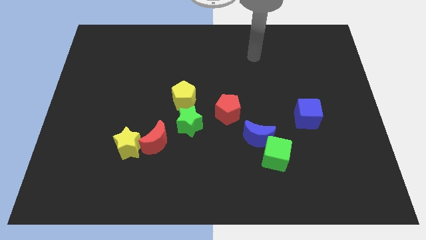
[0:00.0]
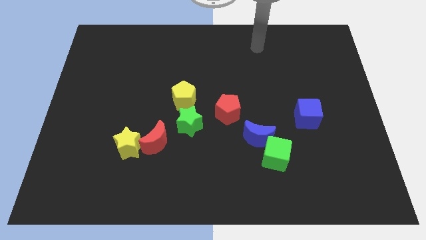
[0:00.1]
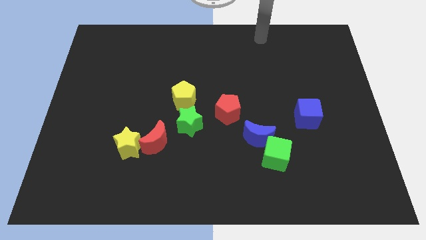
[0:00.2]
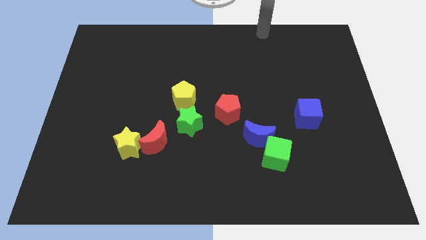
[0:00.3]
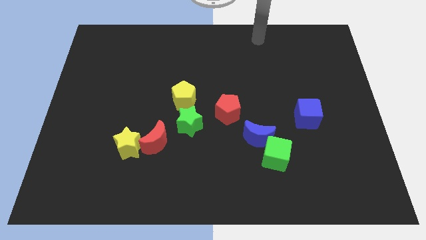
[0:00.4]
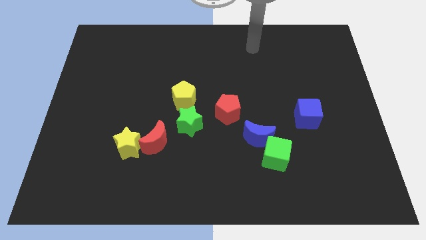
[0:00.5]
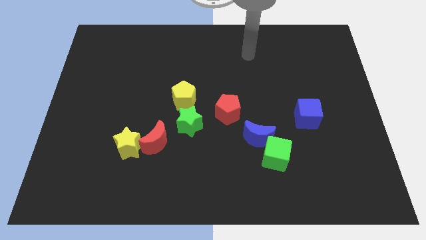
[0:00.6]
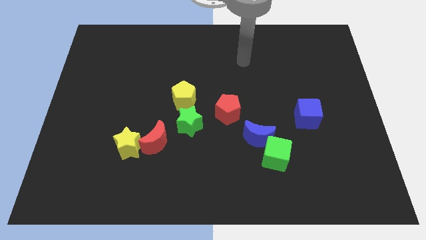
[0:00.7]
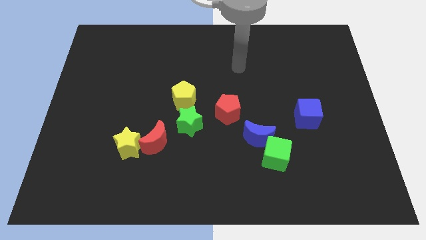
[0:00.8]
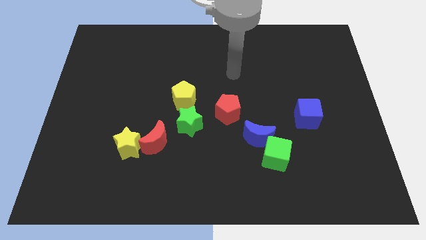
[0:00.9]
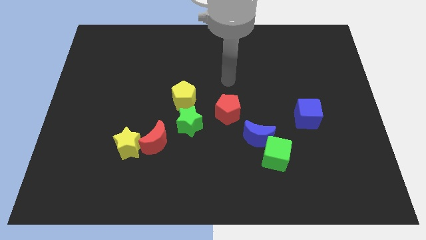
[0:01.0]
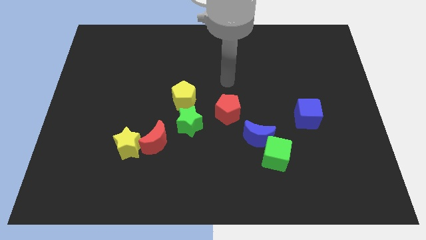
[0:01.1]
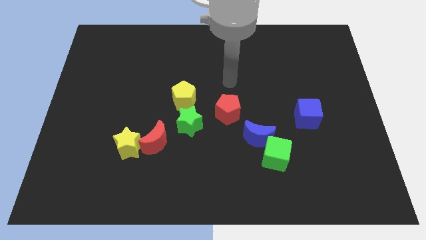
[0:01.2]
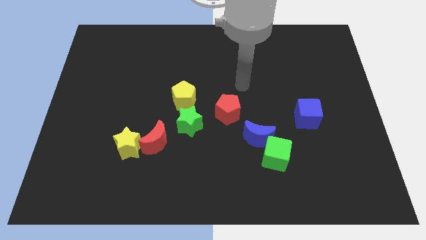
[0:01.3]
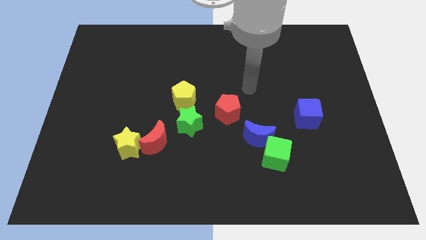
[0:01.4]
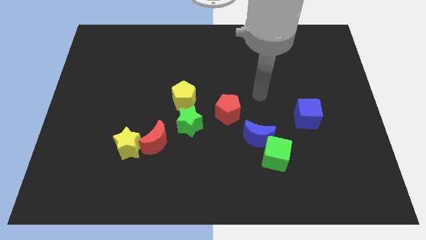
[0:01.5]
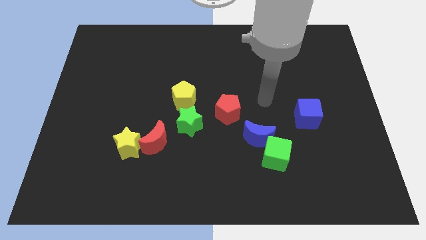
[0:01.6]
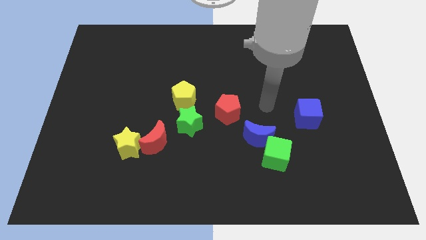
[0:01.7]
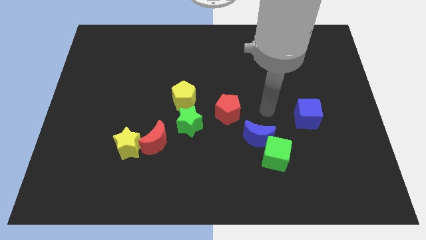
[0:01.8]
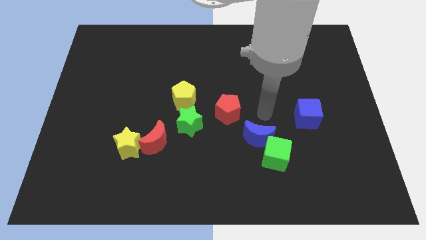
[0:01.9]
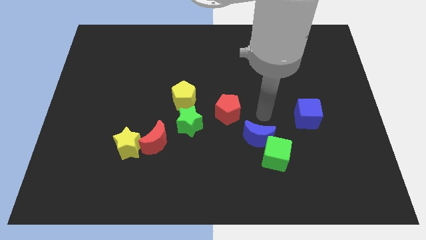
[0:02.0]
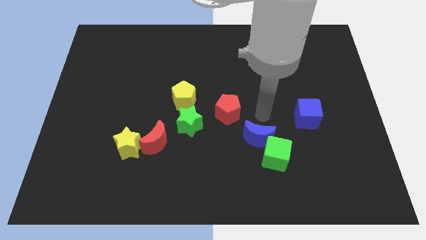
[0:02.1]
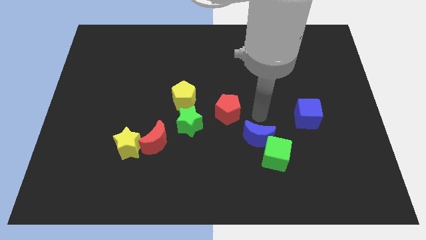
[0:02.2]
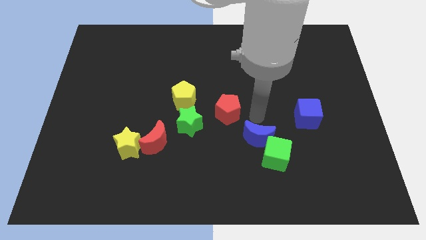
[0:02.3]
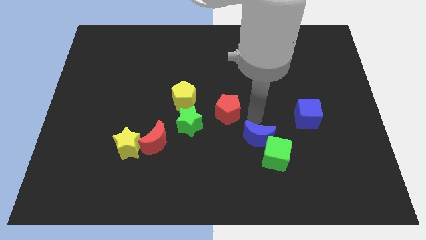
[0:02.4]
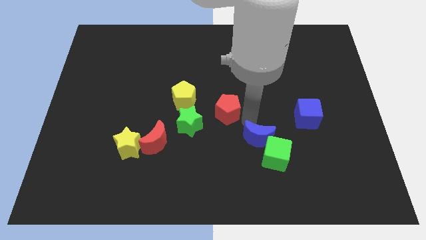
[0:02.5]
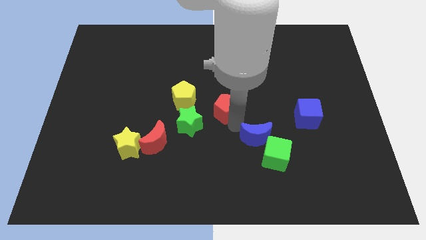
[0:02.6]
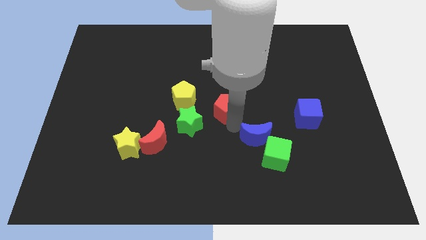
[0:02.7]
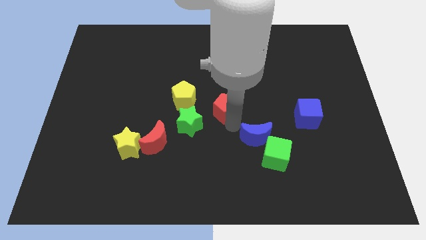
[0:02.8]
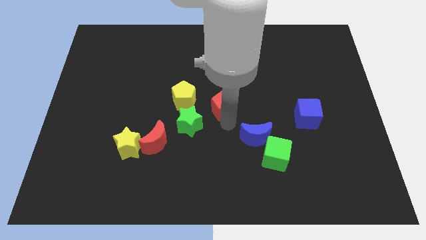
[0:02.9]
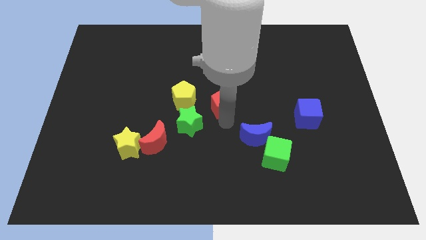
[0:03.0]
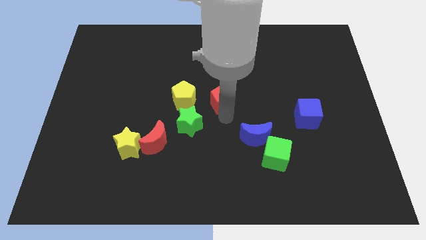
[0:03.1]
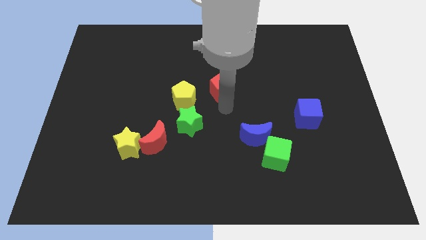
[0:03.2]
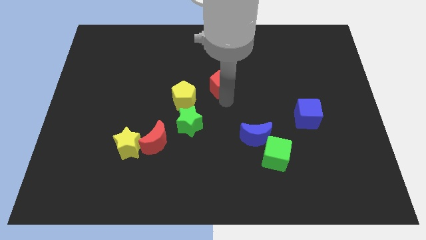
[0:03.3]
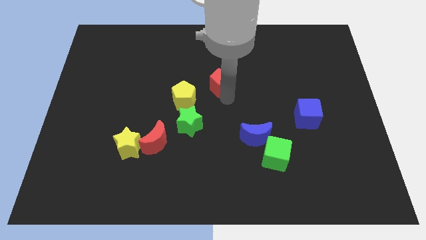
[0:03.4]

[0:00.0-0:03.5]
move the red pentagon towards upward

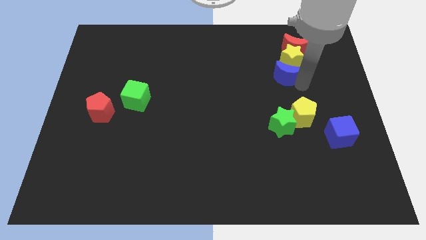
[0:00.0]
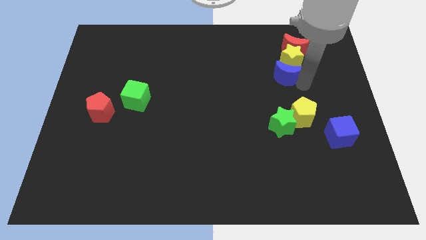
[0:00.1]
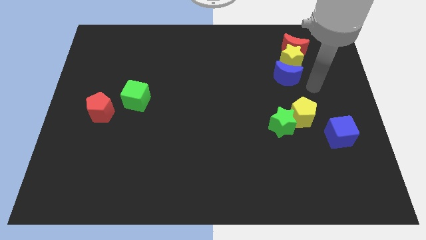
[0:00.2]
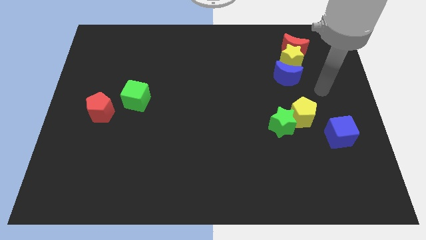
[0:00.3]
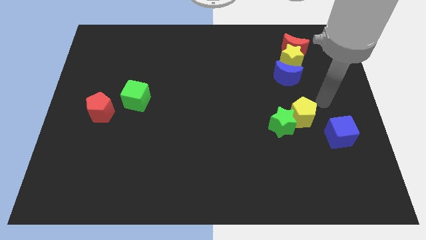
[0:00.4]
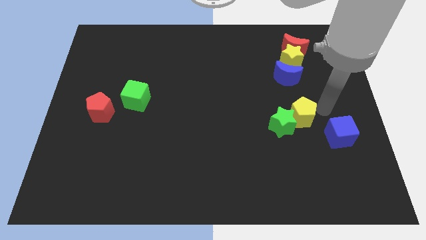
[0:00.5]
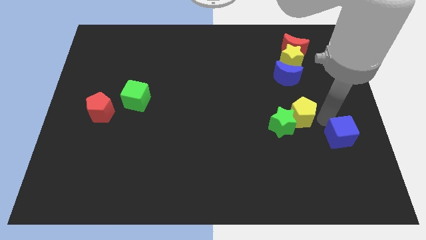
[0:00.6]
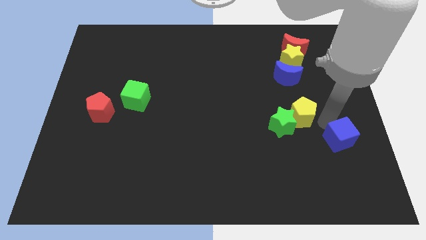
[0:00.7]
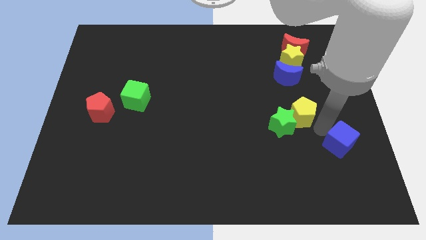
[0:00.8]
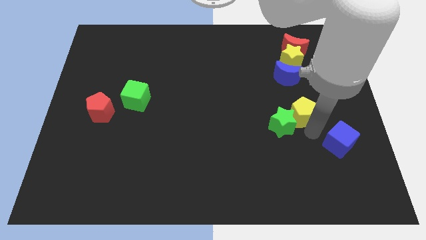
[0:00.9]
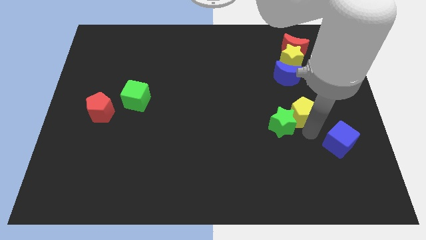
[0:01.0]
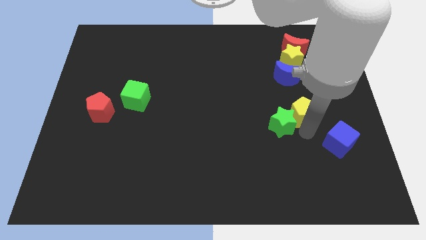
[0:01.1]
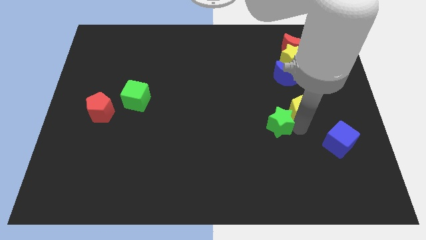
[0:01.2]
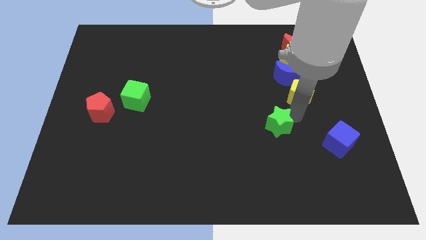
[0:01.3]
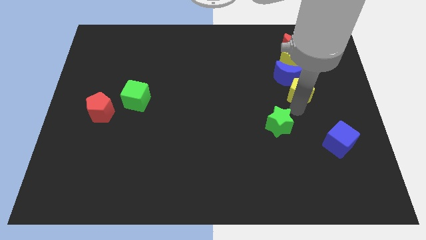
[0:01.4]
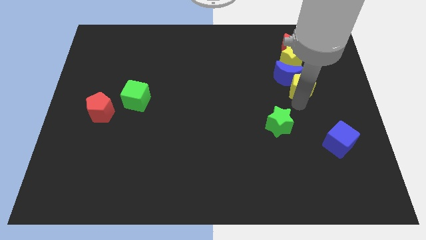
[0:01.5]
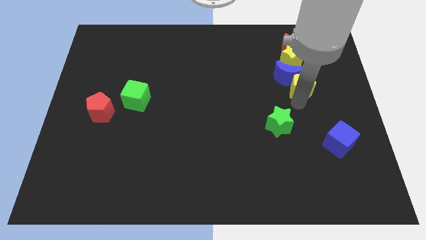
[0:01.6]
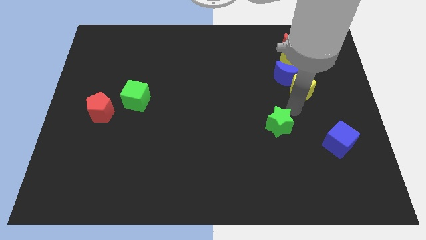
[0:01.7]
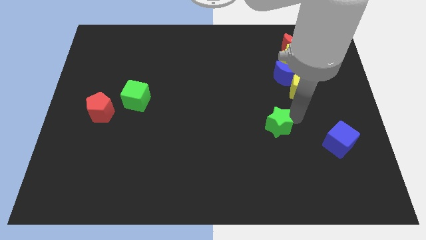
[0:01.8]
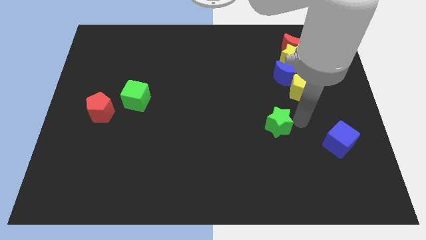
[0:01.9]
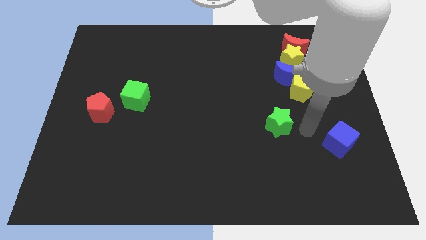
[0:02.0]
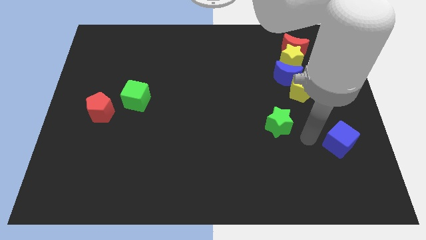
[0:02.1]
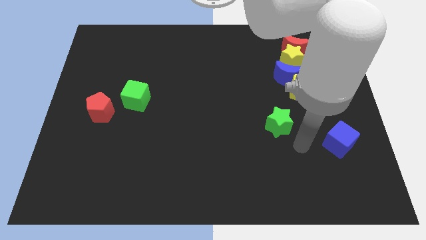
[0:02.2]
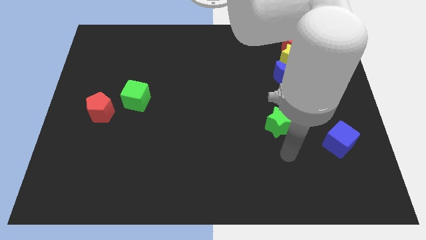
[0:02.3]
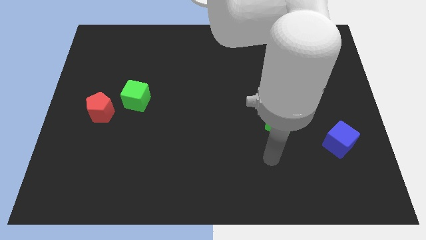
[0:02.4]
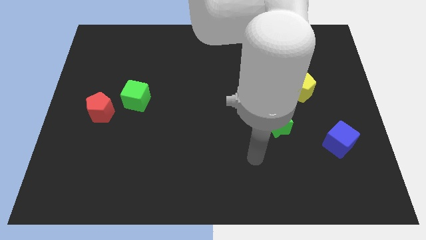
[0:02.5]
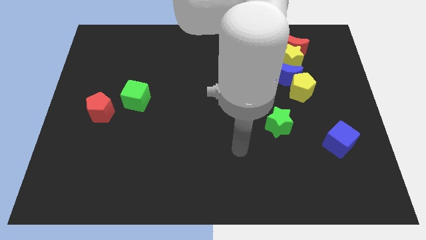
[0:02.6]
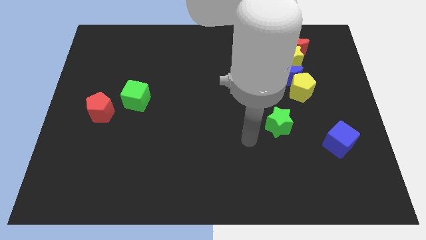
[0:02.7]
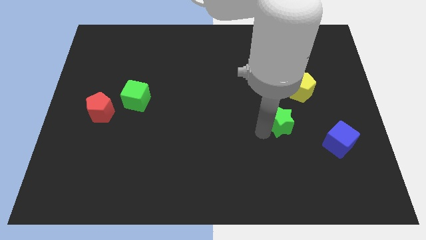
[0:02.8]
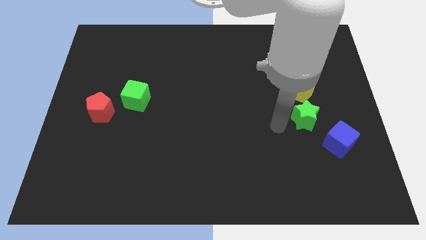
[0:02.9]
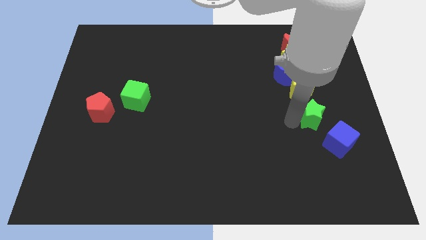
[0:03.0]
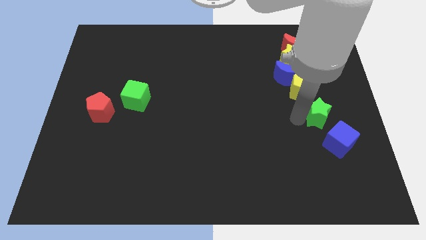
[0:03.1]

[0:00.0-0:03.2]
push the yellow pentagon to right bottom of the blue moon

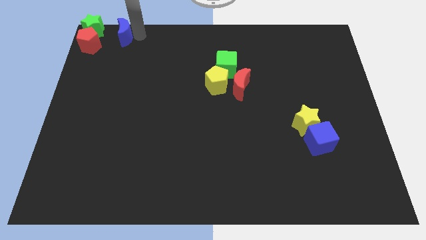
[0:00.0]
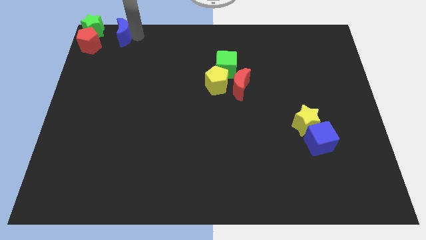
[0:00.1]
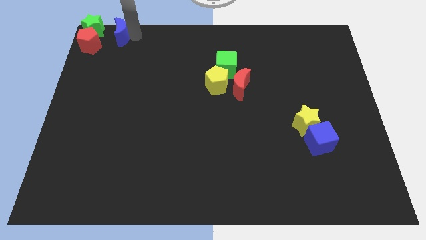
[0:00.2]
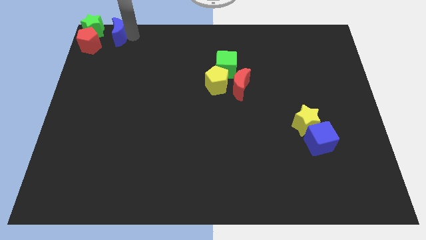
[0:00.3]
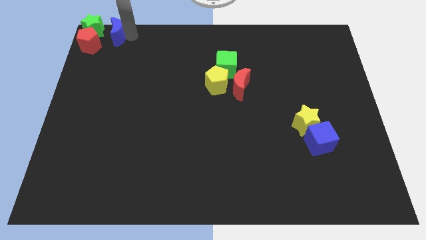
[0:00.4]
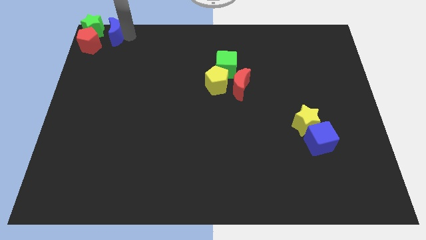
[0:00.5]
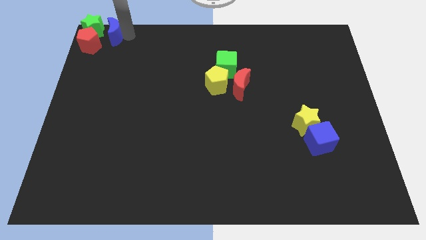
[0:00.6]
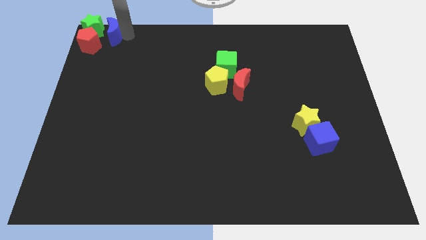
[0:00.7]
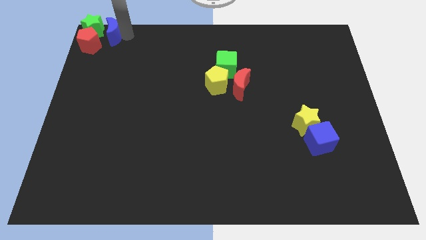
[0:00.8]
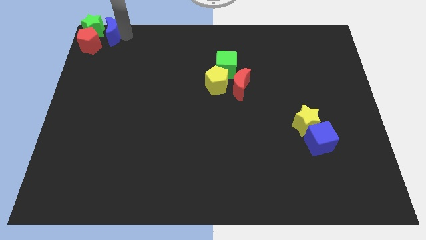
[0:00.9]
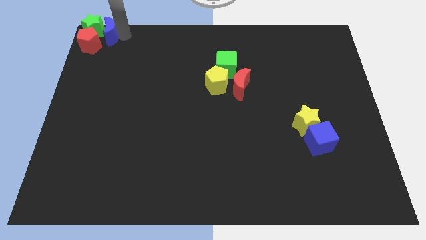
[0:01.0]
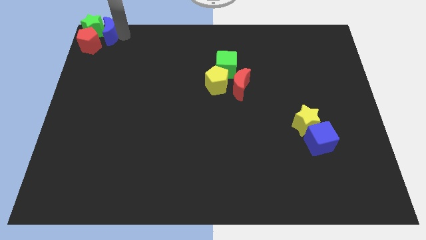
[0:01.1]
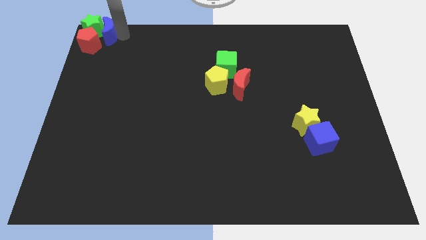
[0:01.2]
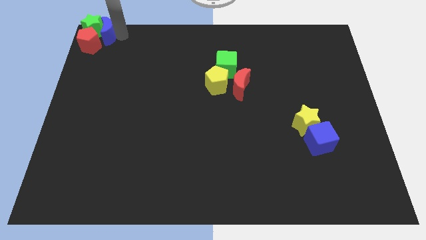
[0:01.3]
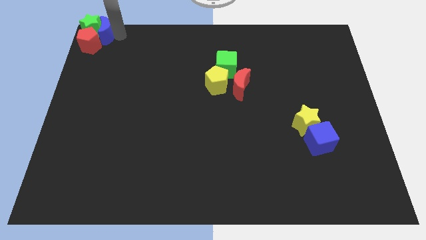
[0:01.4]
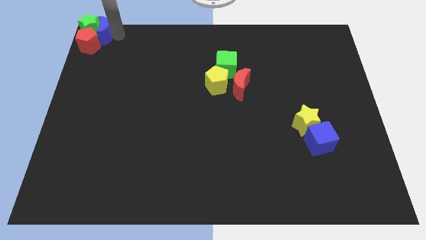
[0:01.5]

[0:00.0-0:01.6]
move the blue crescent to the right of the green star

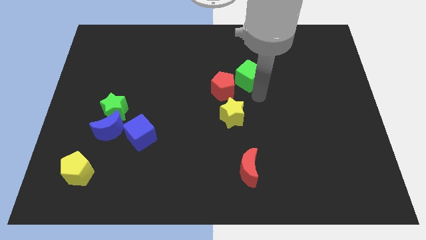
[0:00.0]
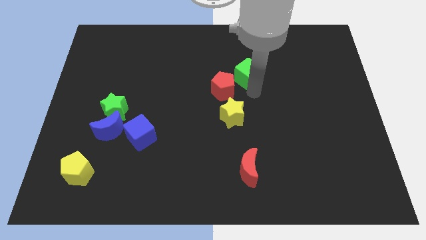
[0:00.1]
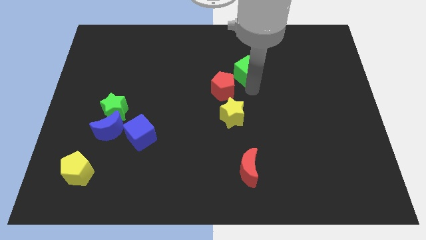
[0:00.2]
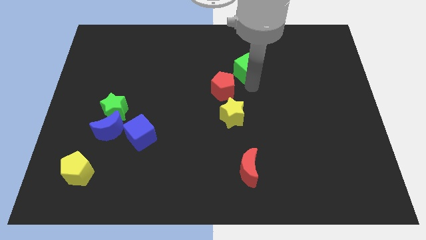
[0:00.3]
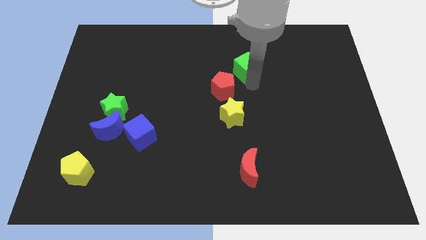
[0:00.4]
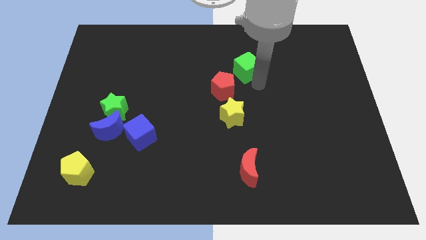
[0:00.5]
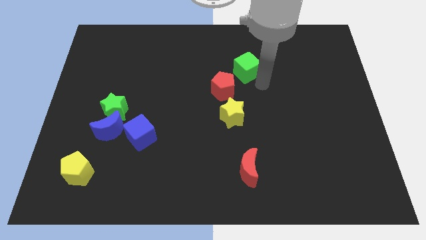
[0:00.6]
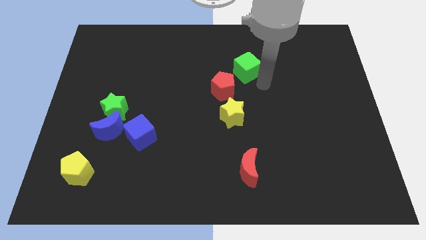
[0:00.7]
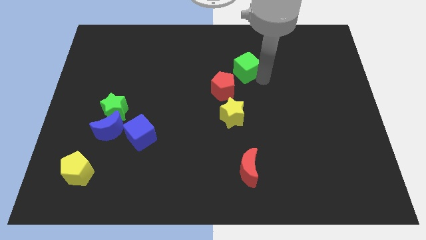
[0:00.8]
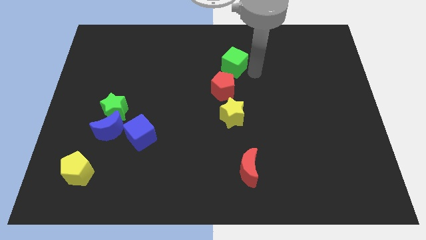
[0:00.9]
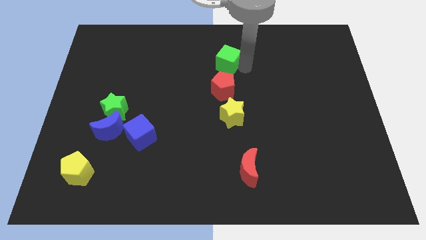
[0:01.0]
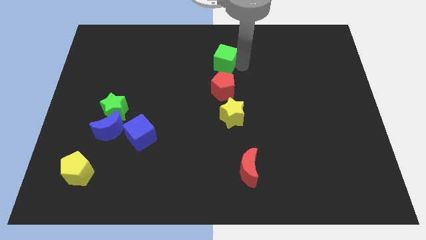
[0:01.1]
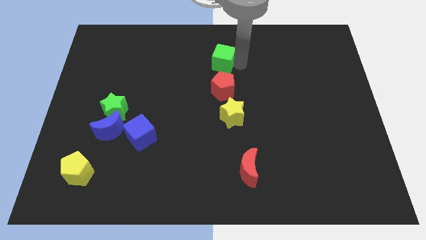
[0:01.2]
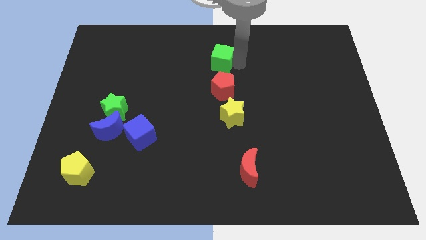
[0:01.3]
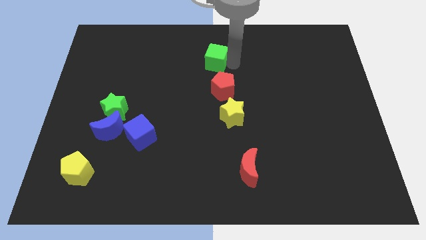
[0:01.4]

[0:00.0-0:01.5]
place green cube above the red pentagon
